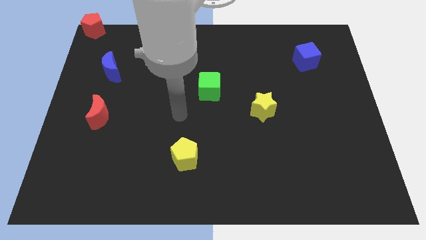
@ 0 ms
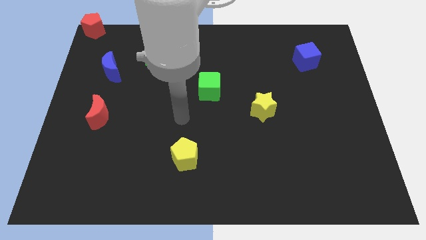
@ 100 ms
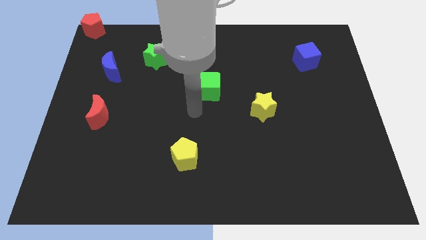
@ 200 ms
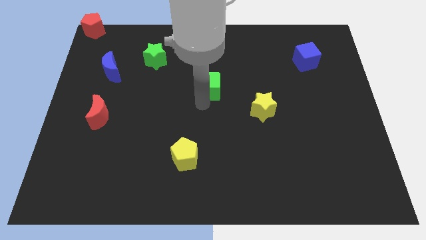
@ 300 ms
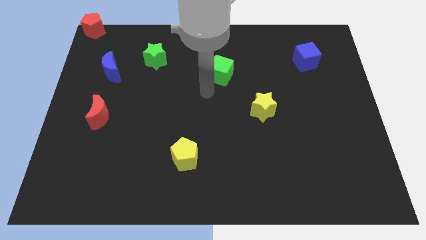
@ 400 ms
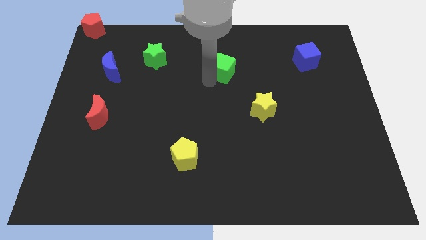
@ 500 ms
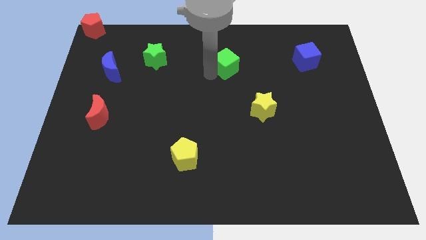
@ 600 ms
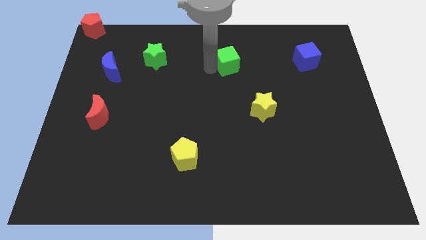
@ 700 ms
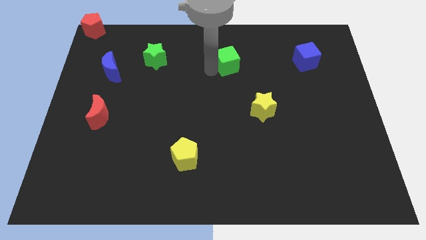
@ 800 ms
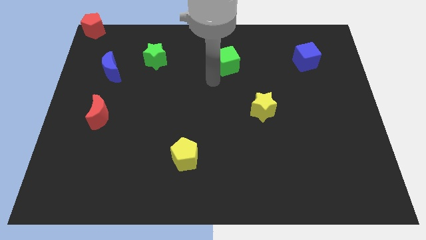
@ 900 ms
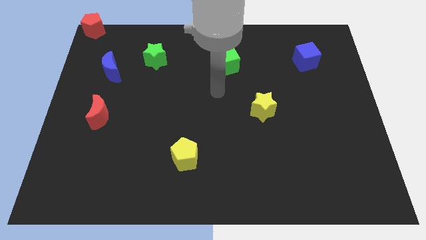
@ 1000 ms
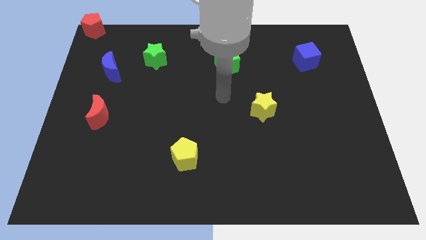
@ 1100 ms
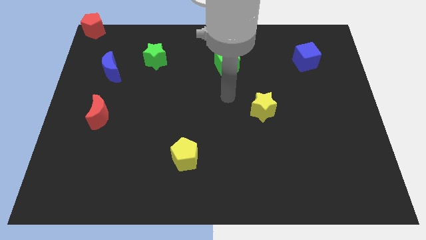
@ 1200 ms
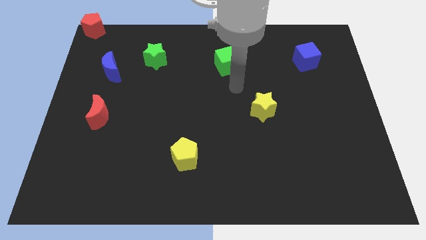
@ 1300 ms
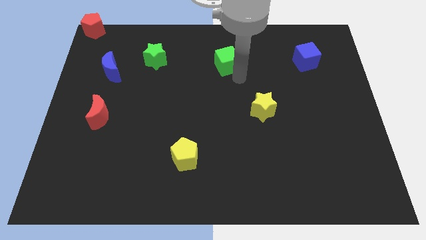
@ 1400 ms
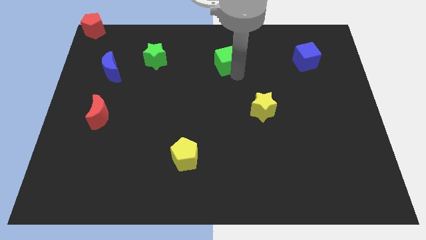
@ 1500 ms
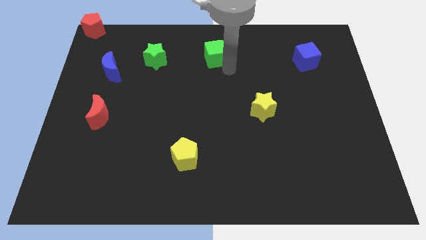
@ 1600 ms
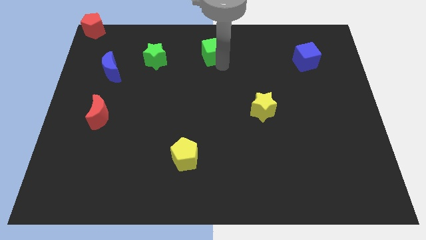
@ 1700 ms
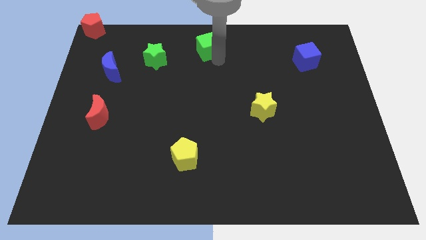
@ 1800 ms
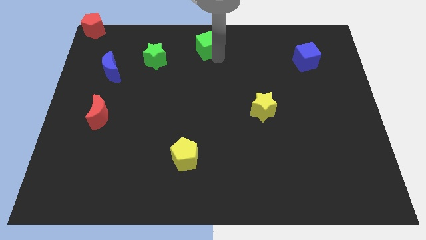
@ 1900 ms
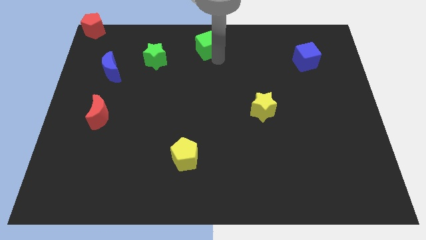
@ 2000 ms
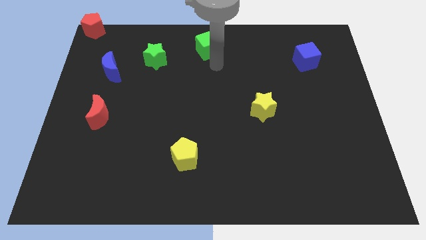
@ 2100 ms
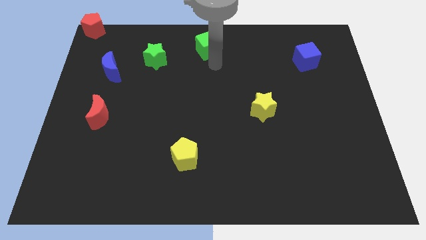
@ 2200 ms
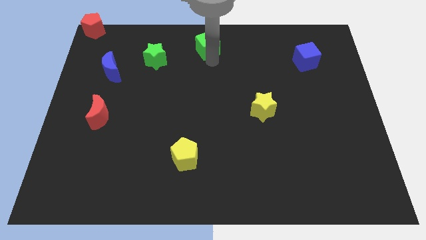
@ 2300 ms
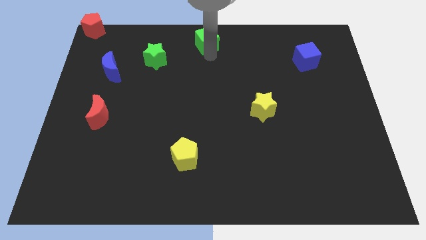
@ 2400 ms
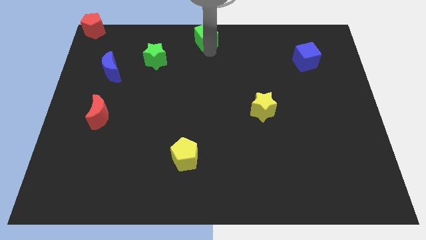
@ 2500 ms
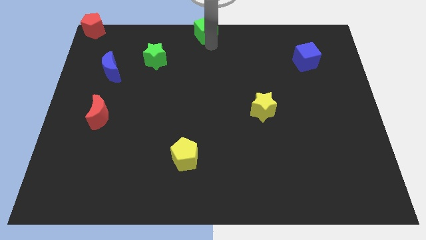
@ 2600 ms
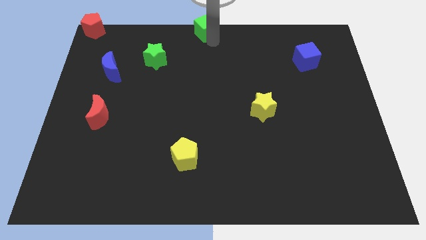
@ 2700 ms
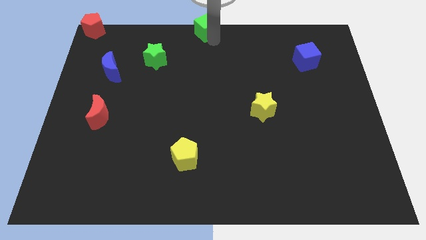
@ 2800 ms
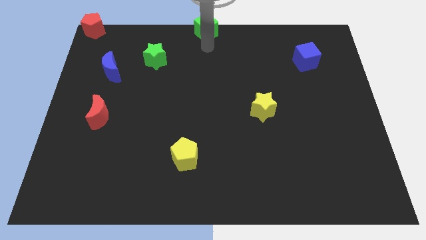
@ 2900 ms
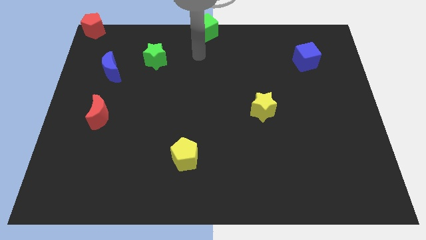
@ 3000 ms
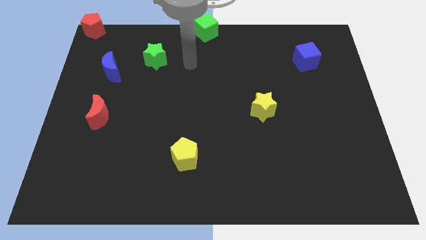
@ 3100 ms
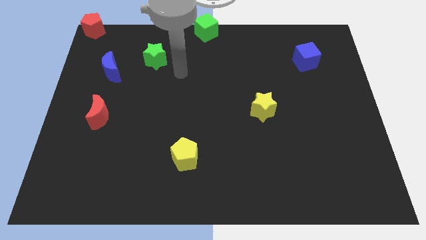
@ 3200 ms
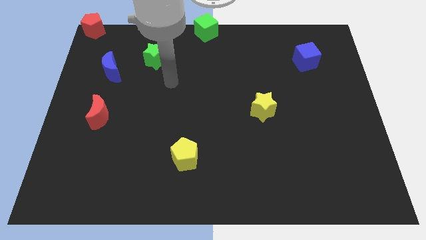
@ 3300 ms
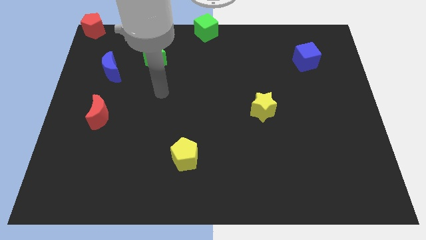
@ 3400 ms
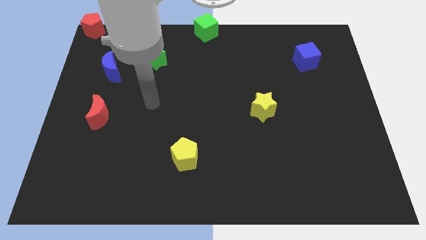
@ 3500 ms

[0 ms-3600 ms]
push the green cube to the top of the board

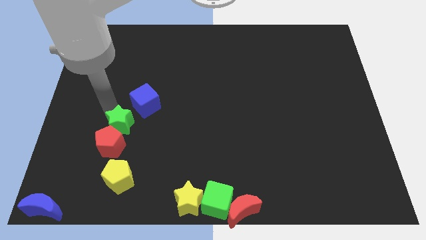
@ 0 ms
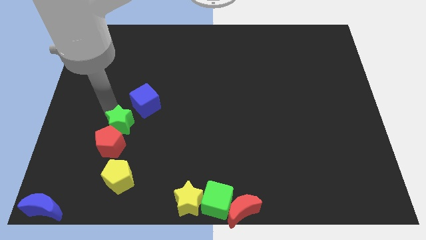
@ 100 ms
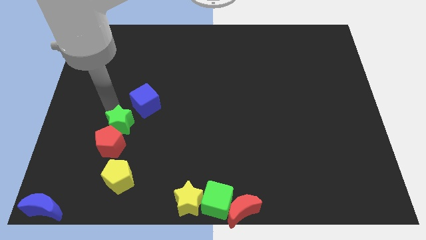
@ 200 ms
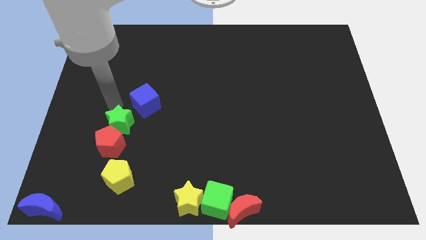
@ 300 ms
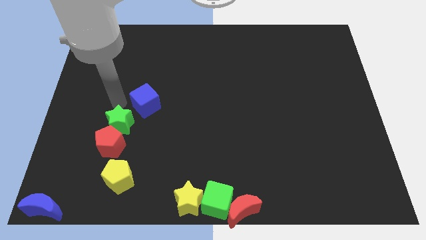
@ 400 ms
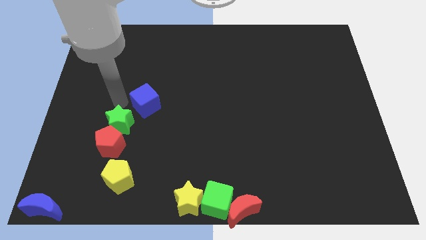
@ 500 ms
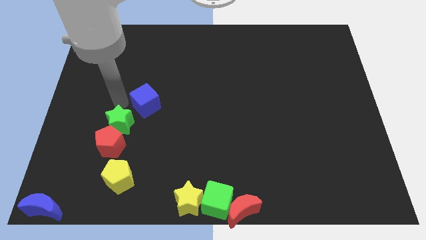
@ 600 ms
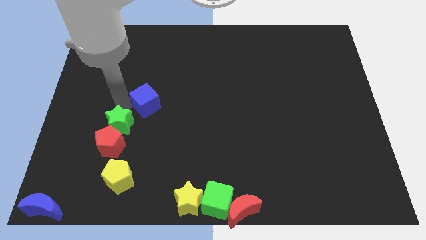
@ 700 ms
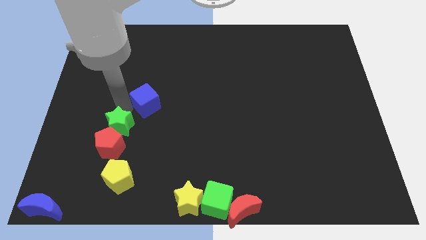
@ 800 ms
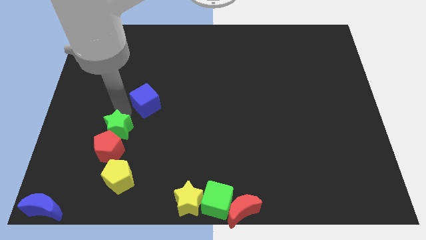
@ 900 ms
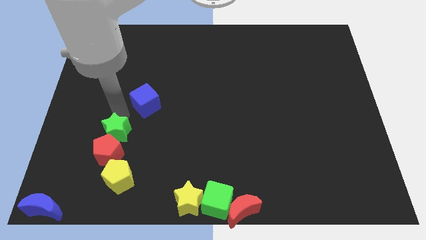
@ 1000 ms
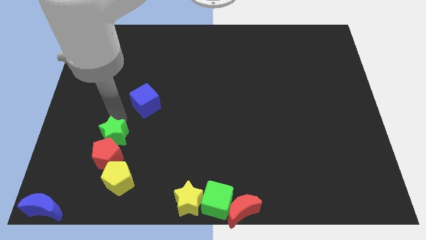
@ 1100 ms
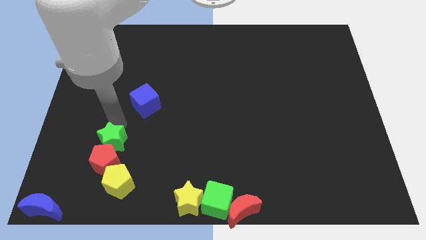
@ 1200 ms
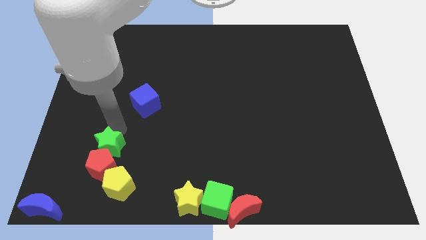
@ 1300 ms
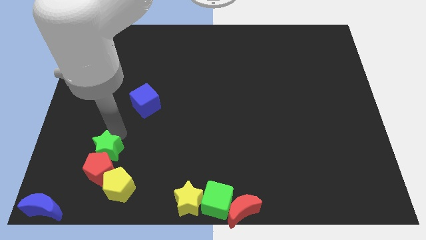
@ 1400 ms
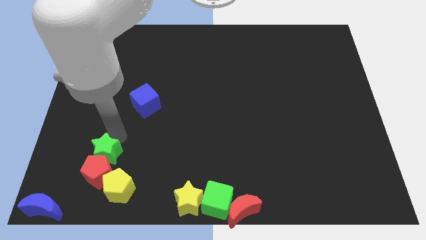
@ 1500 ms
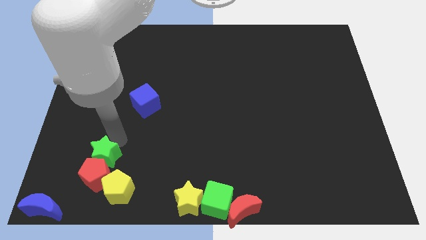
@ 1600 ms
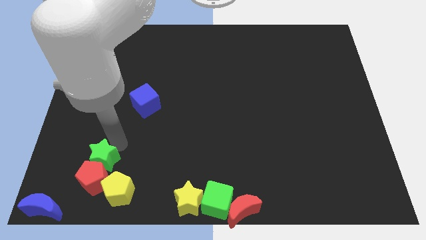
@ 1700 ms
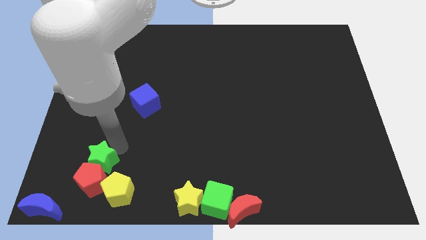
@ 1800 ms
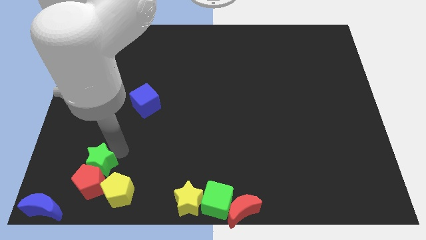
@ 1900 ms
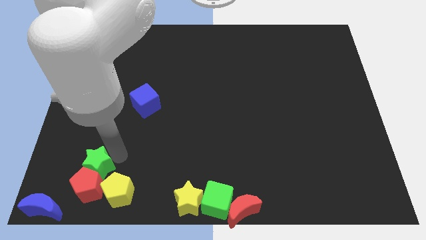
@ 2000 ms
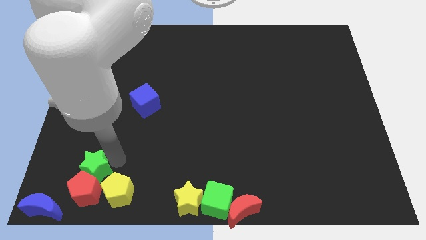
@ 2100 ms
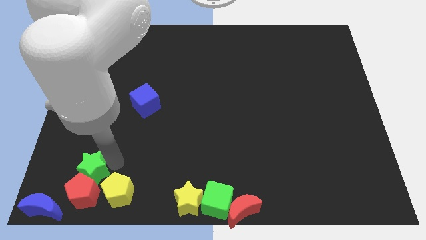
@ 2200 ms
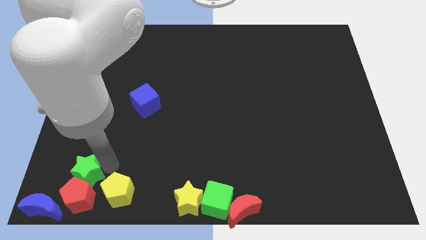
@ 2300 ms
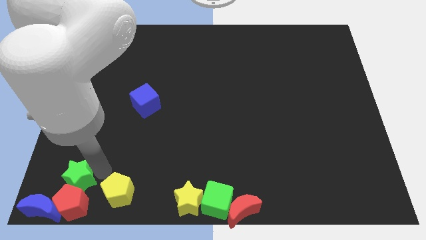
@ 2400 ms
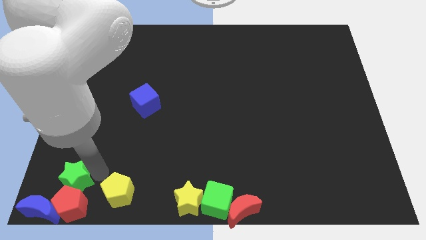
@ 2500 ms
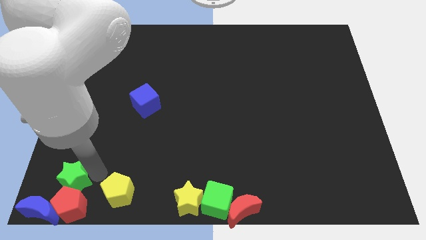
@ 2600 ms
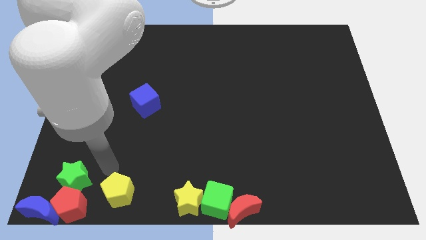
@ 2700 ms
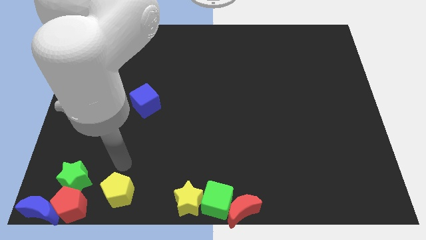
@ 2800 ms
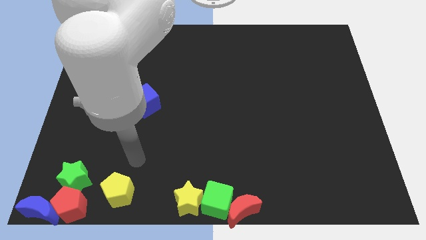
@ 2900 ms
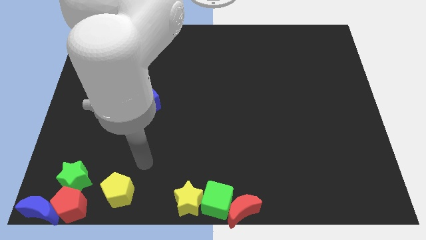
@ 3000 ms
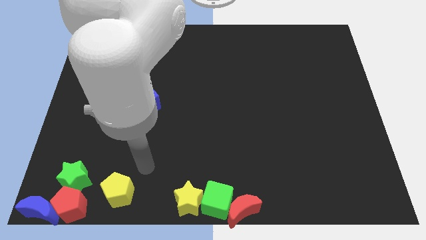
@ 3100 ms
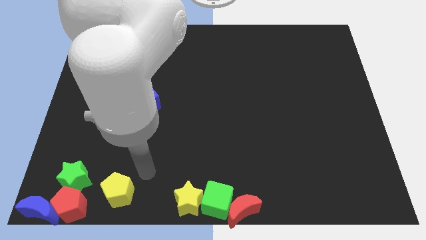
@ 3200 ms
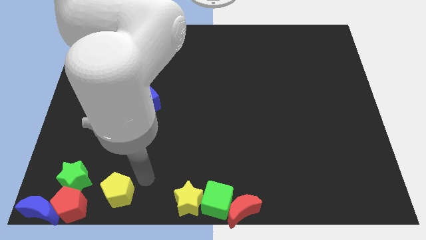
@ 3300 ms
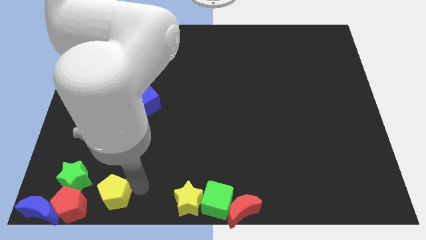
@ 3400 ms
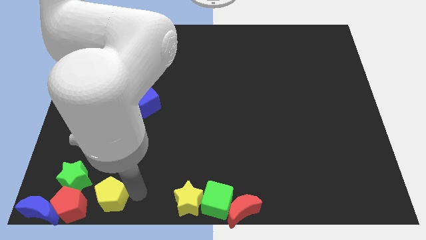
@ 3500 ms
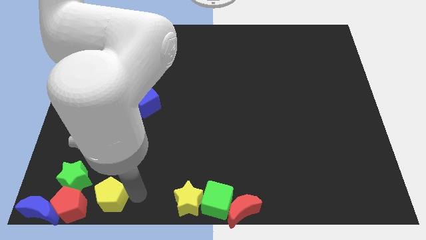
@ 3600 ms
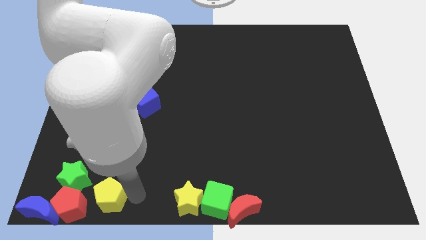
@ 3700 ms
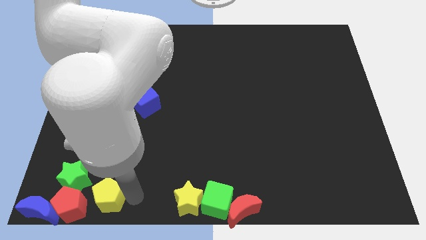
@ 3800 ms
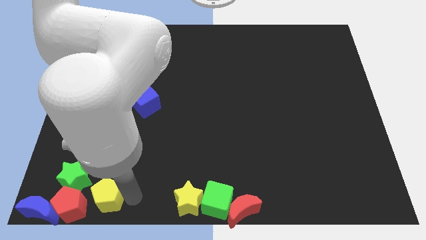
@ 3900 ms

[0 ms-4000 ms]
move the group of objects to the bottom left of the board

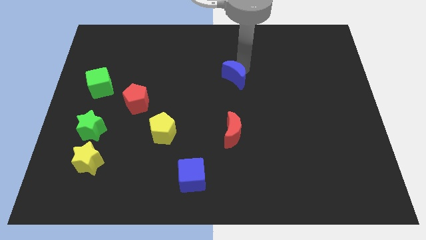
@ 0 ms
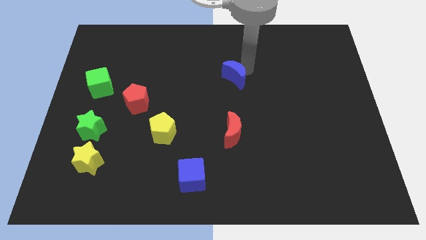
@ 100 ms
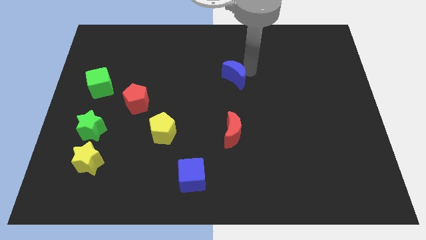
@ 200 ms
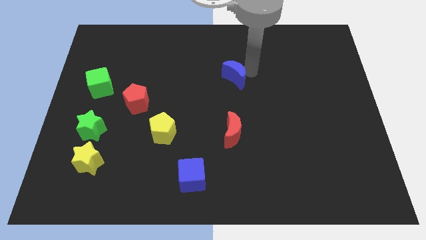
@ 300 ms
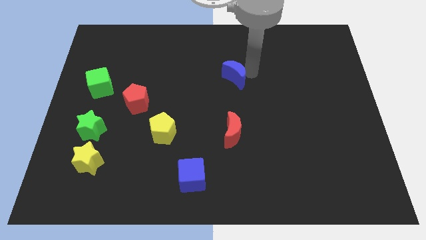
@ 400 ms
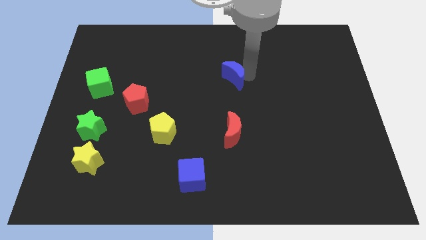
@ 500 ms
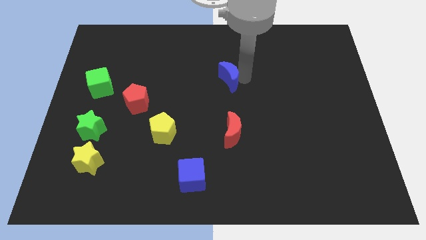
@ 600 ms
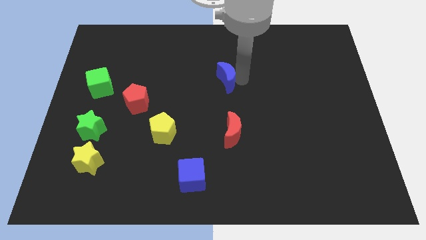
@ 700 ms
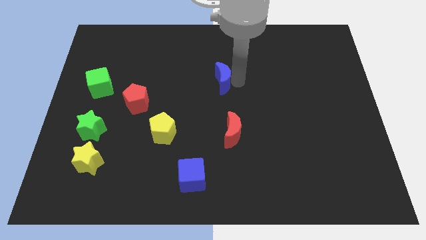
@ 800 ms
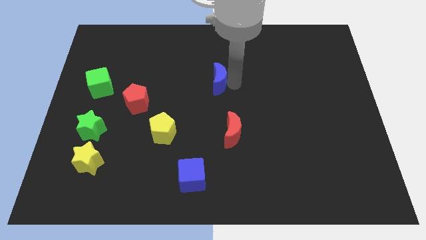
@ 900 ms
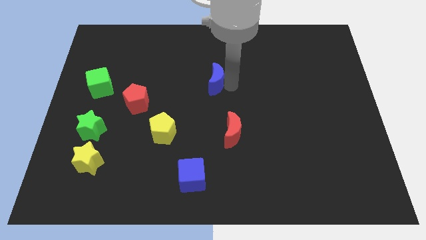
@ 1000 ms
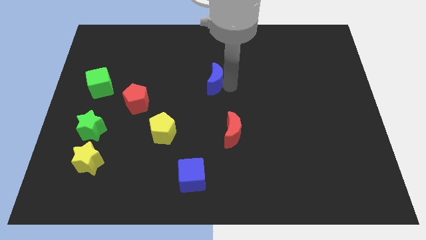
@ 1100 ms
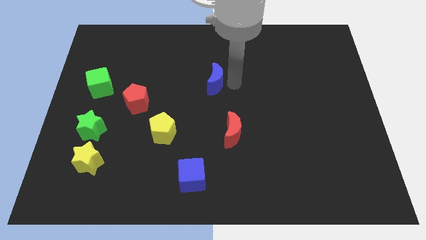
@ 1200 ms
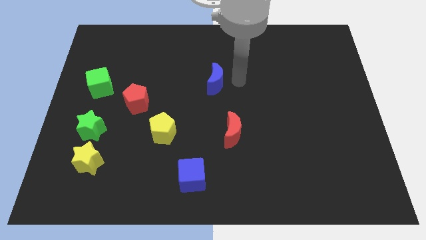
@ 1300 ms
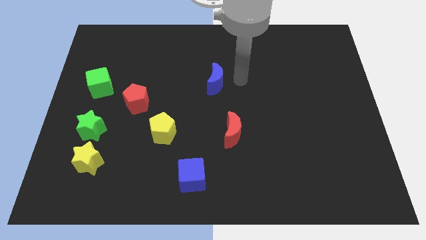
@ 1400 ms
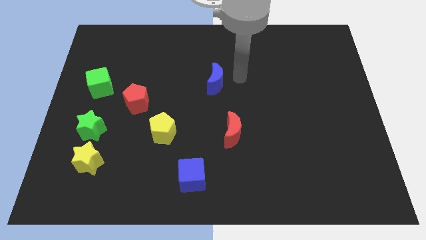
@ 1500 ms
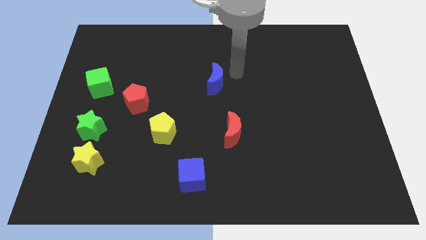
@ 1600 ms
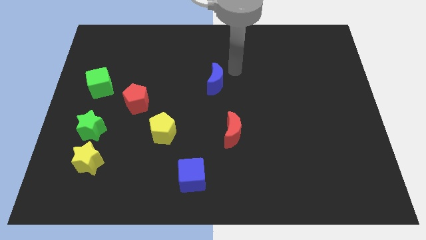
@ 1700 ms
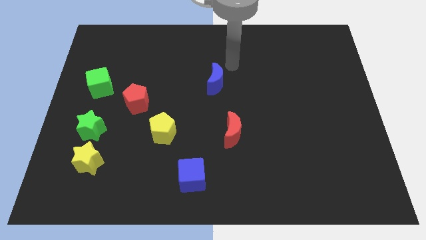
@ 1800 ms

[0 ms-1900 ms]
slightly adjust the blue moon
